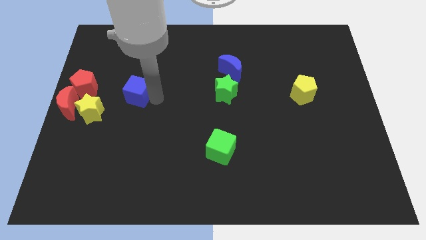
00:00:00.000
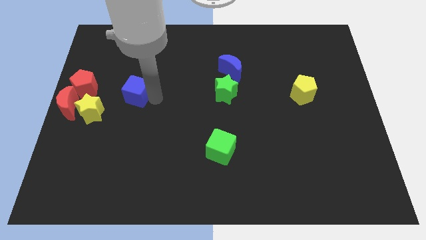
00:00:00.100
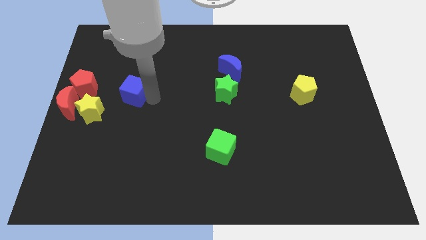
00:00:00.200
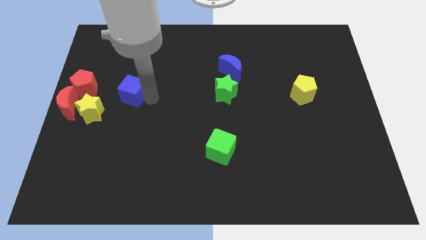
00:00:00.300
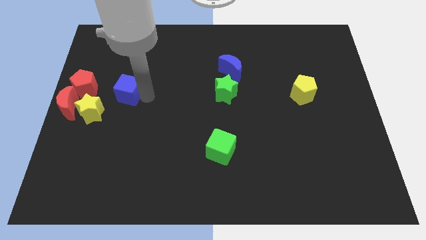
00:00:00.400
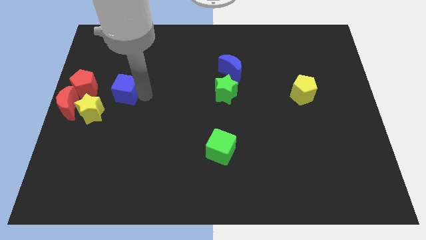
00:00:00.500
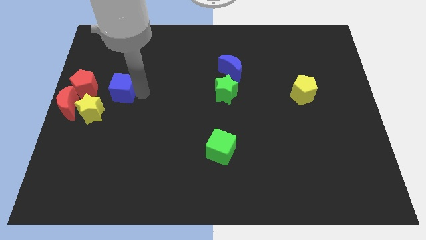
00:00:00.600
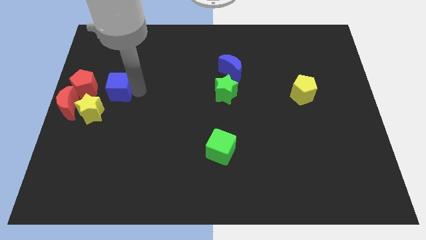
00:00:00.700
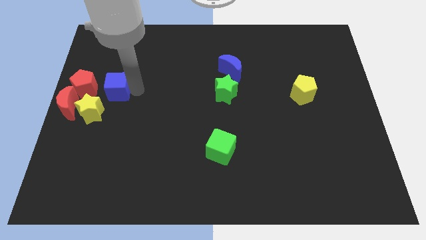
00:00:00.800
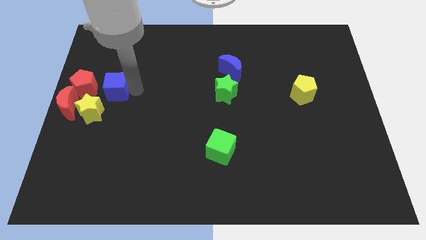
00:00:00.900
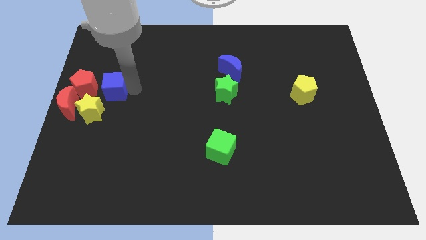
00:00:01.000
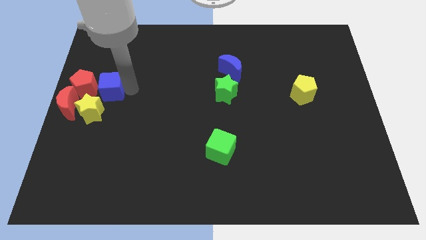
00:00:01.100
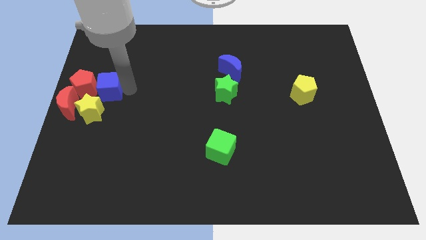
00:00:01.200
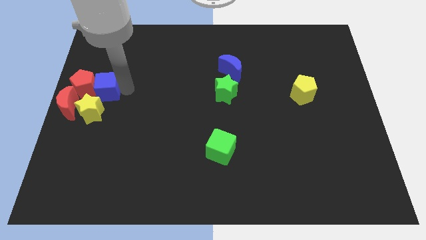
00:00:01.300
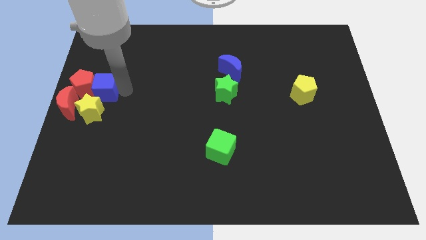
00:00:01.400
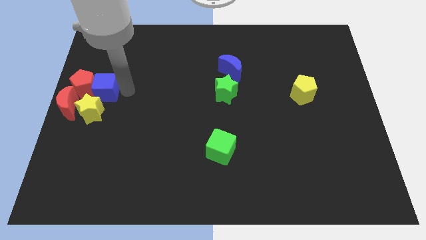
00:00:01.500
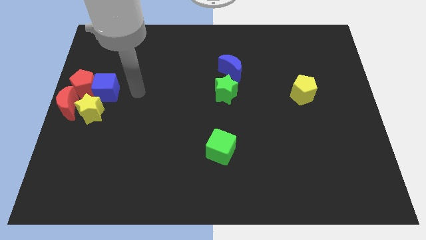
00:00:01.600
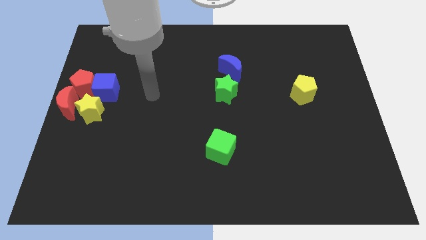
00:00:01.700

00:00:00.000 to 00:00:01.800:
push the blue cube into the red pentagon

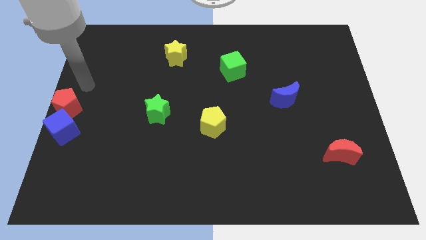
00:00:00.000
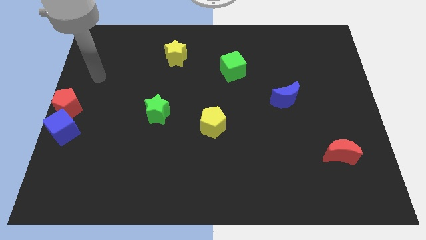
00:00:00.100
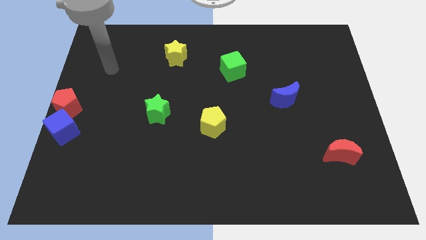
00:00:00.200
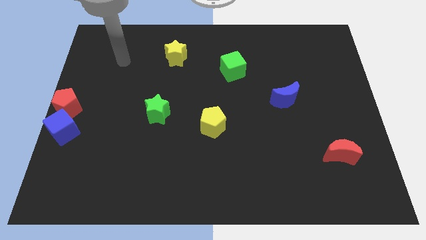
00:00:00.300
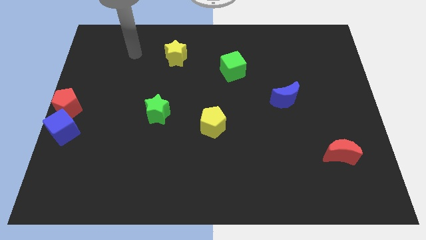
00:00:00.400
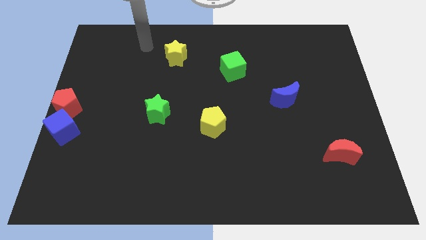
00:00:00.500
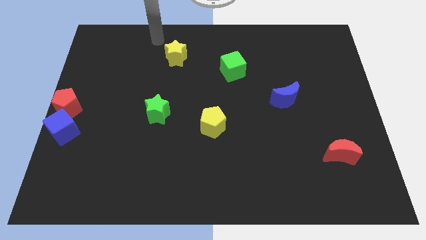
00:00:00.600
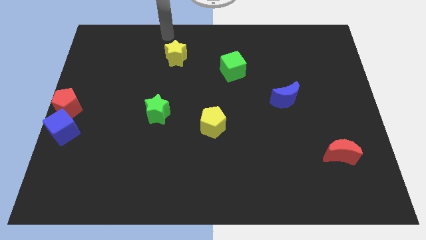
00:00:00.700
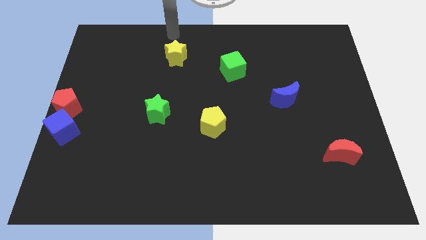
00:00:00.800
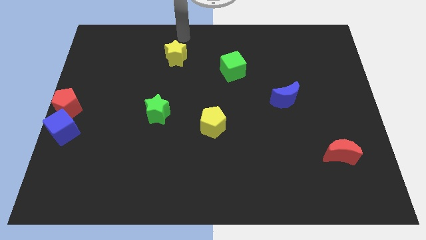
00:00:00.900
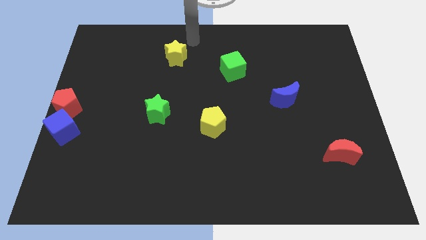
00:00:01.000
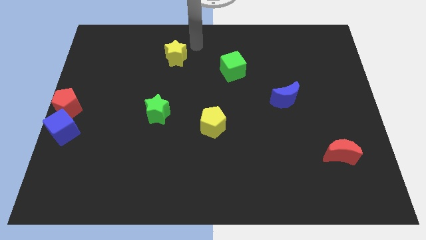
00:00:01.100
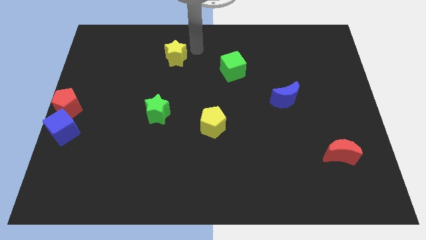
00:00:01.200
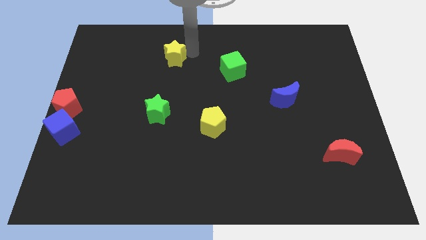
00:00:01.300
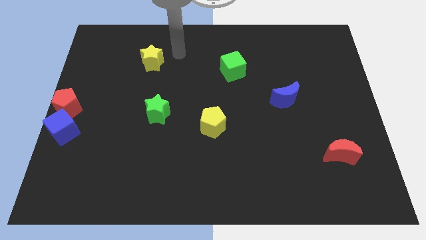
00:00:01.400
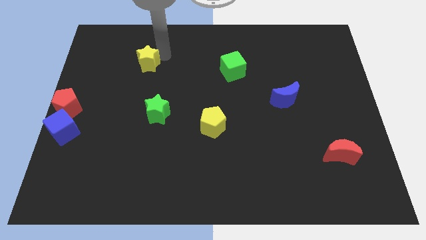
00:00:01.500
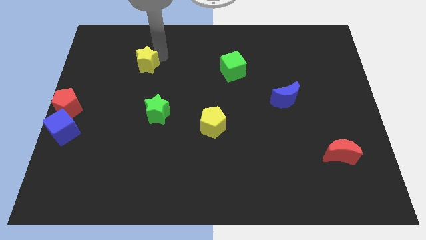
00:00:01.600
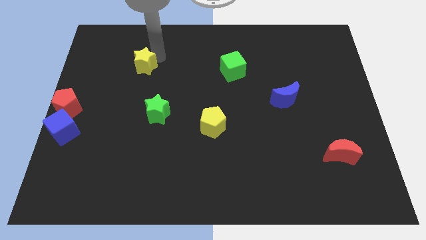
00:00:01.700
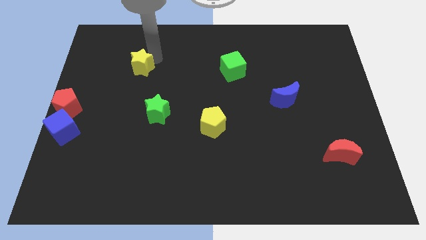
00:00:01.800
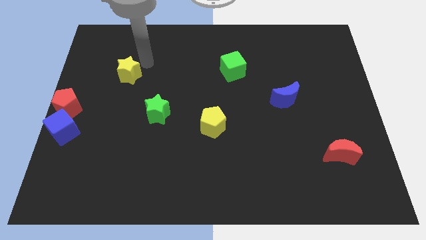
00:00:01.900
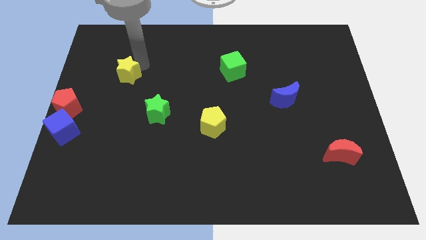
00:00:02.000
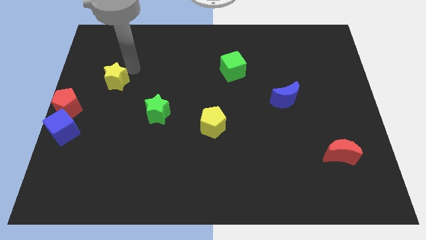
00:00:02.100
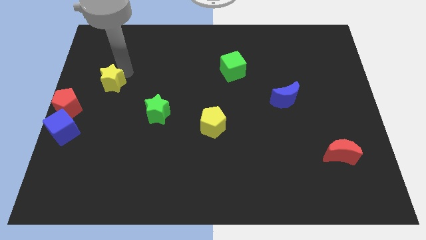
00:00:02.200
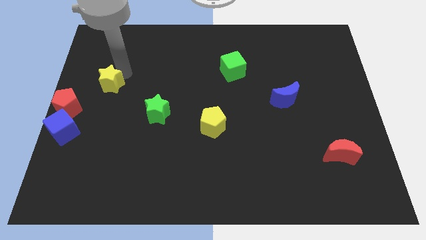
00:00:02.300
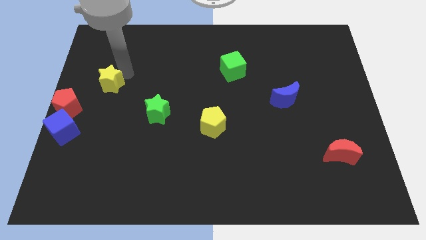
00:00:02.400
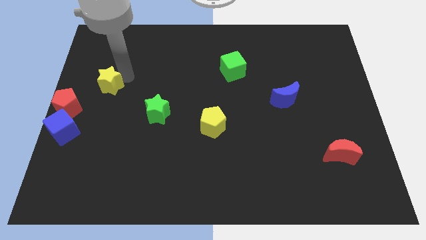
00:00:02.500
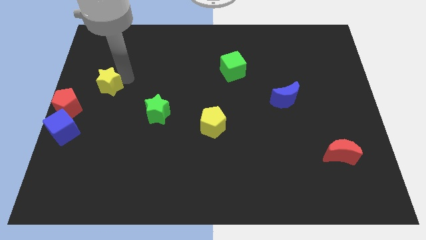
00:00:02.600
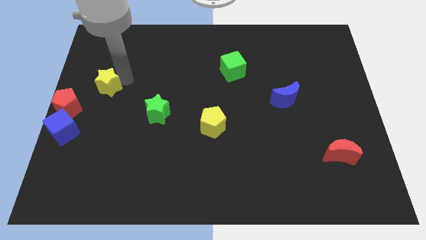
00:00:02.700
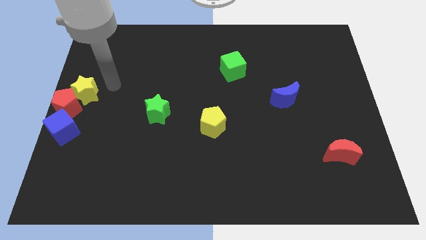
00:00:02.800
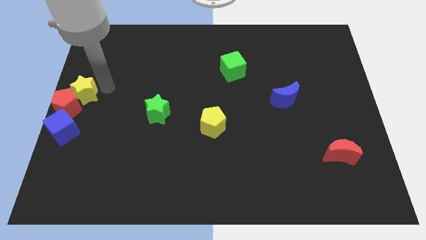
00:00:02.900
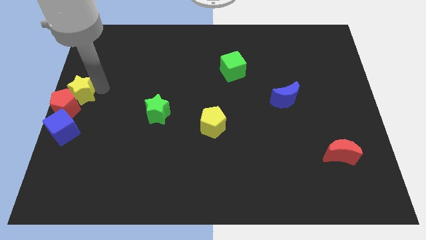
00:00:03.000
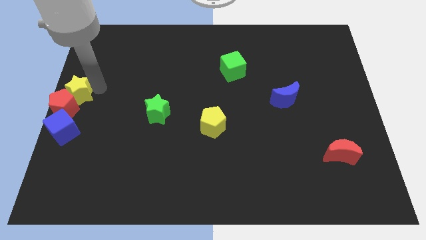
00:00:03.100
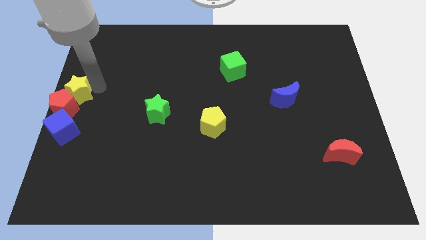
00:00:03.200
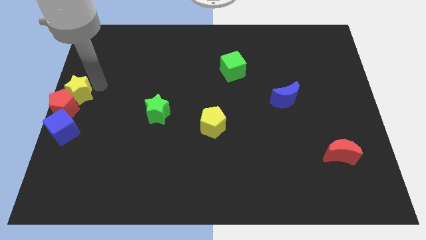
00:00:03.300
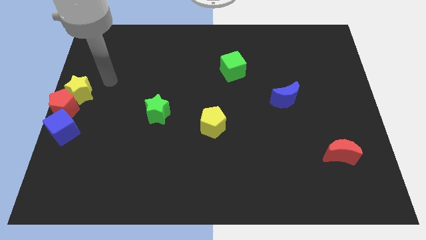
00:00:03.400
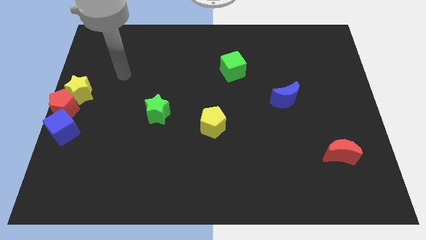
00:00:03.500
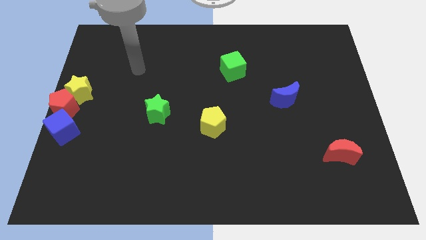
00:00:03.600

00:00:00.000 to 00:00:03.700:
put the yellow star at the top right side of the red pentagon

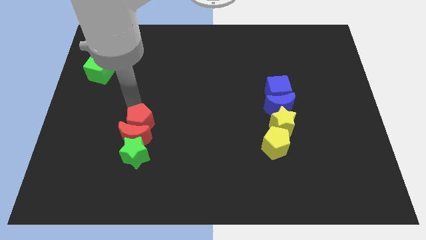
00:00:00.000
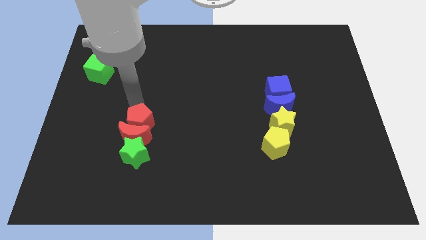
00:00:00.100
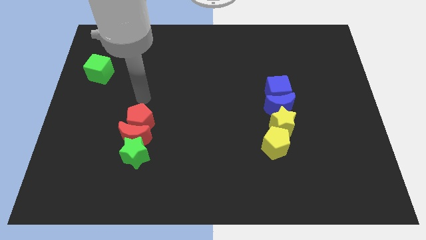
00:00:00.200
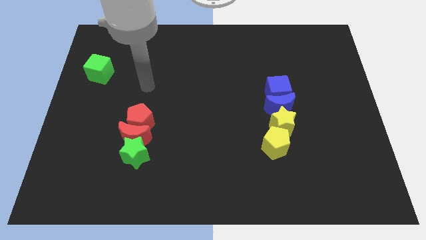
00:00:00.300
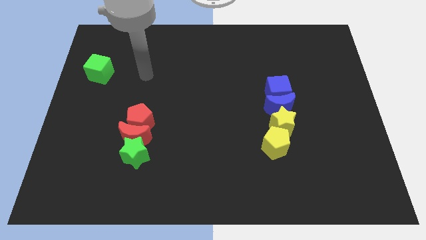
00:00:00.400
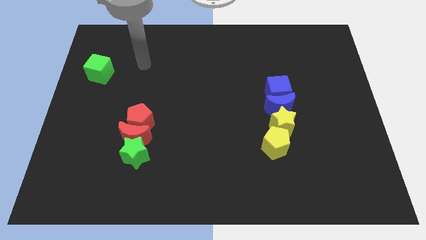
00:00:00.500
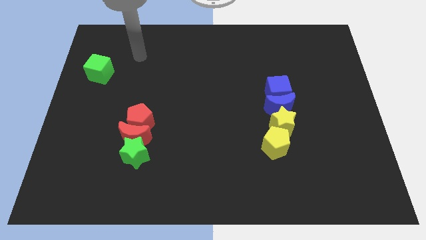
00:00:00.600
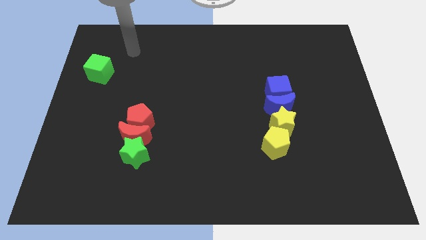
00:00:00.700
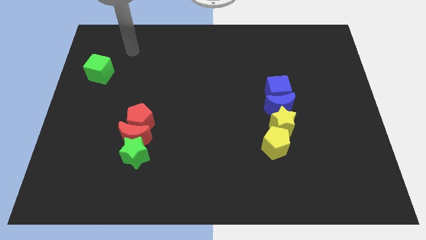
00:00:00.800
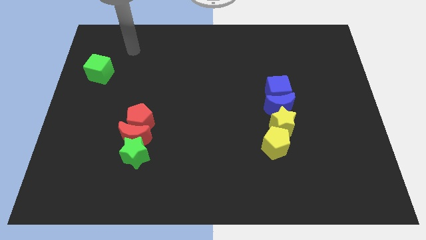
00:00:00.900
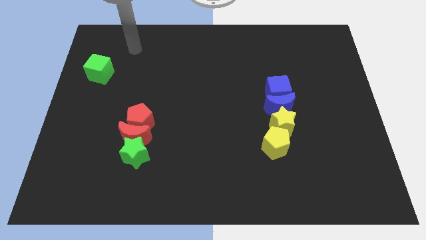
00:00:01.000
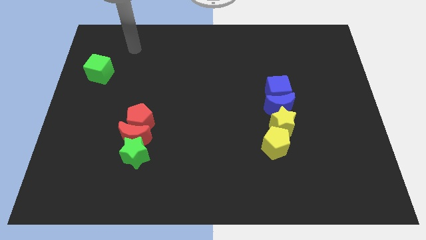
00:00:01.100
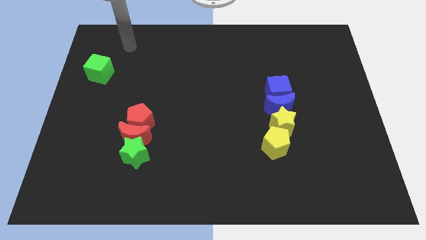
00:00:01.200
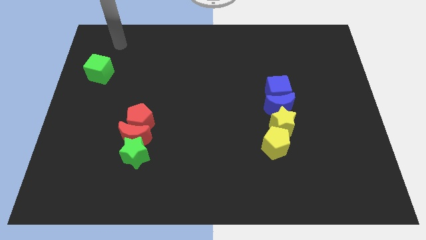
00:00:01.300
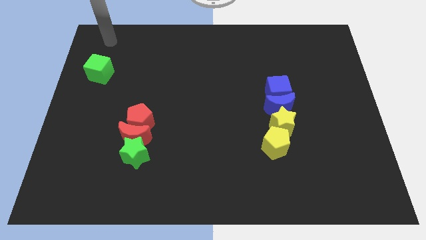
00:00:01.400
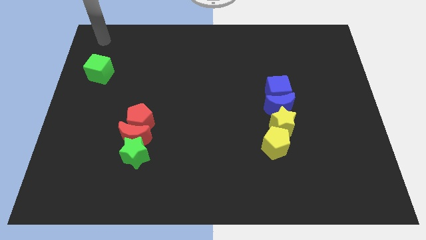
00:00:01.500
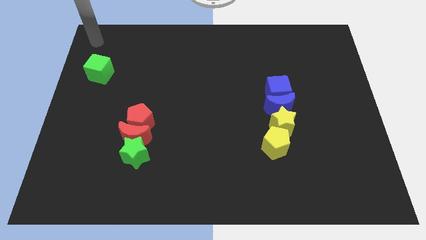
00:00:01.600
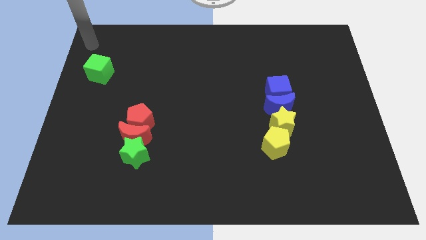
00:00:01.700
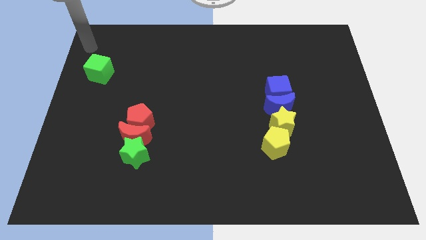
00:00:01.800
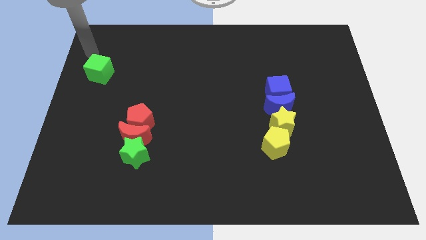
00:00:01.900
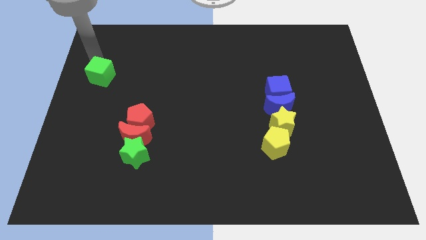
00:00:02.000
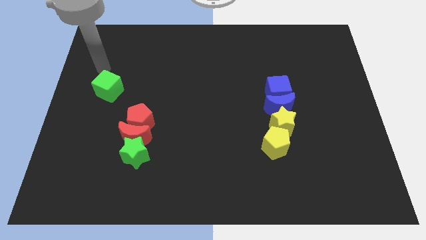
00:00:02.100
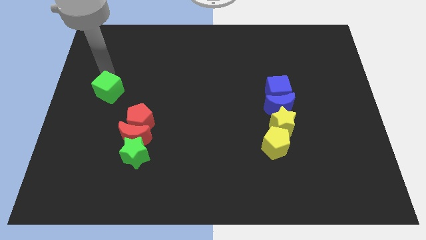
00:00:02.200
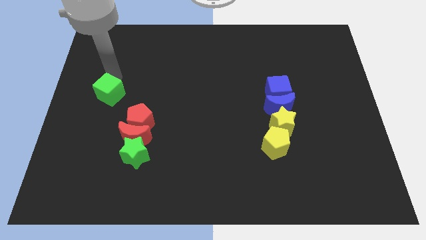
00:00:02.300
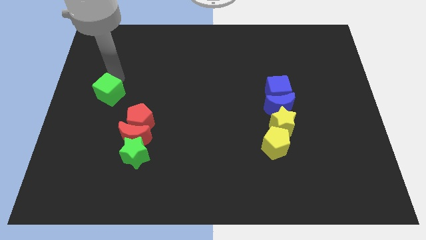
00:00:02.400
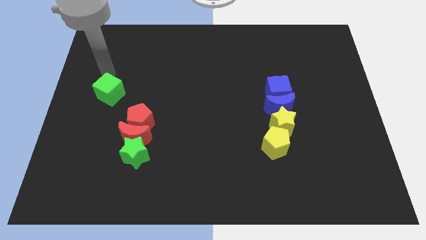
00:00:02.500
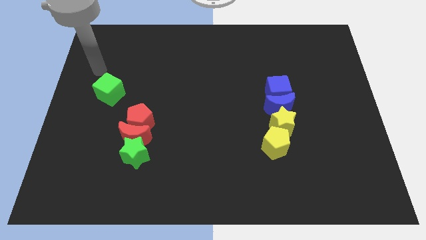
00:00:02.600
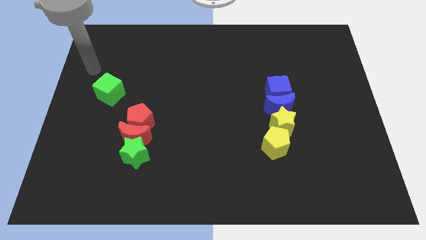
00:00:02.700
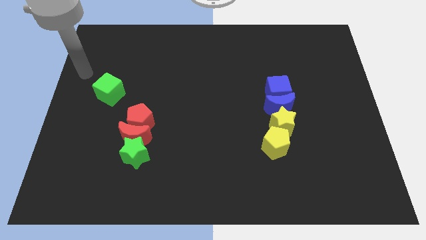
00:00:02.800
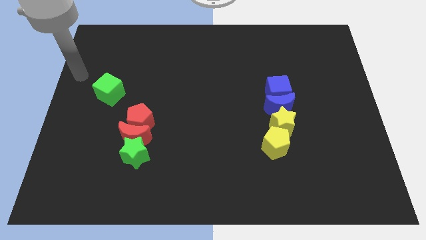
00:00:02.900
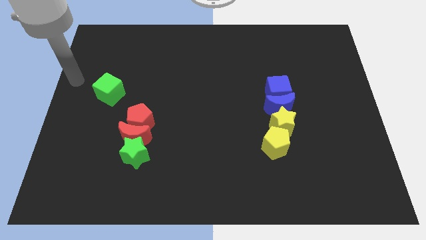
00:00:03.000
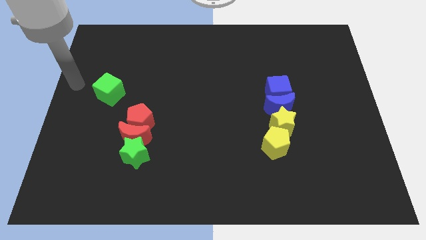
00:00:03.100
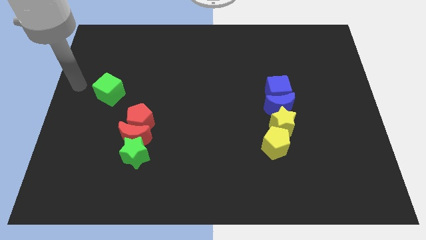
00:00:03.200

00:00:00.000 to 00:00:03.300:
push the green cube towards the top left side of the red pentagon
